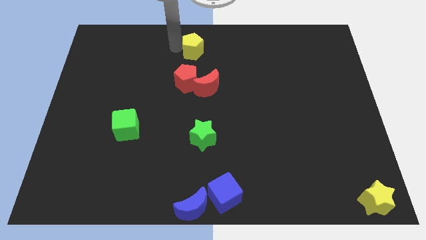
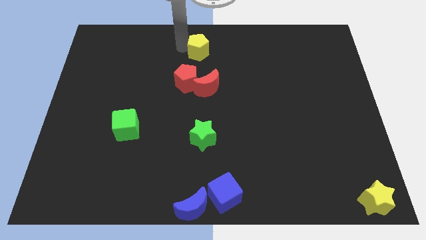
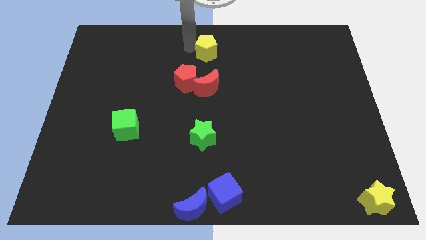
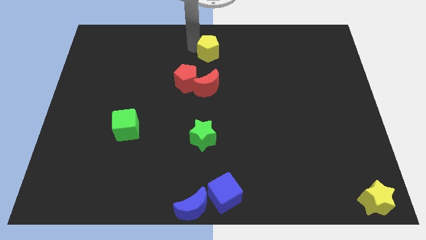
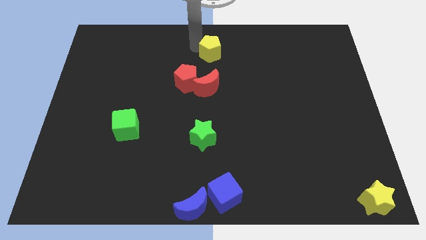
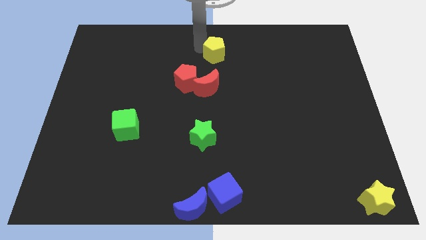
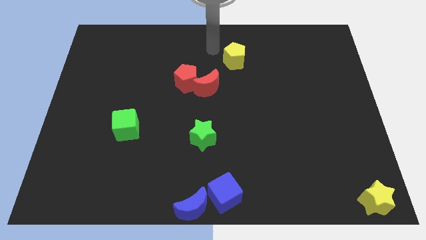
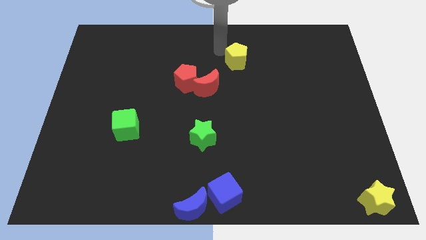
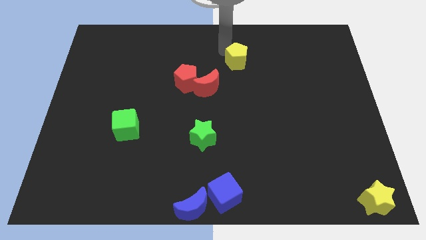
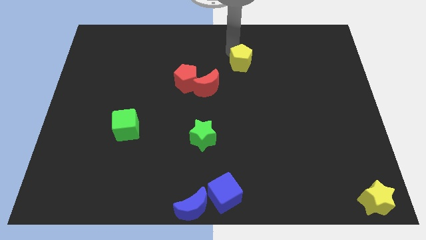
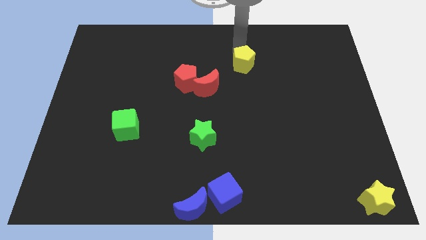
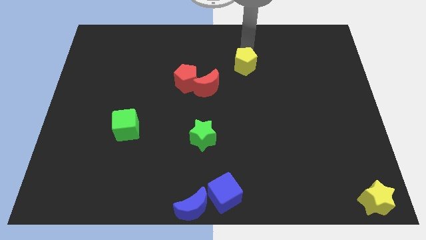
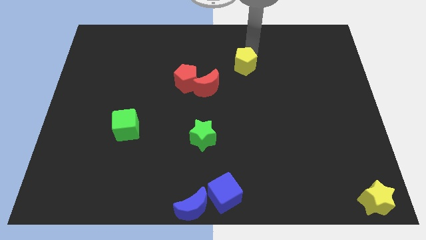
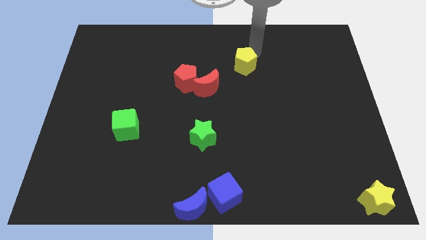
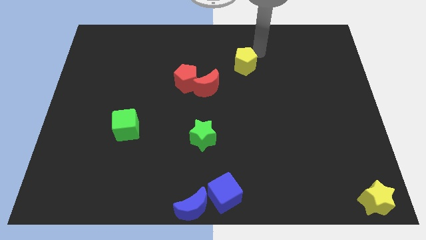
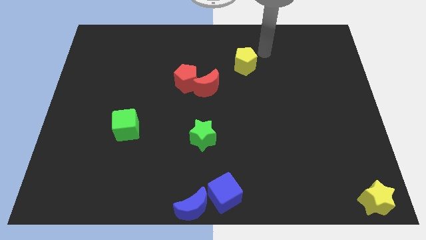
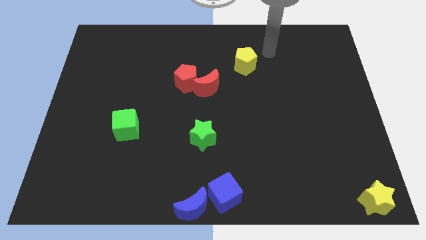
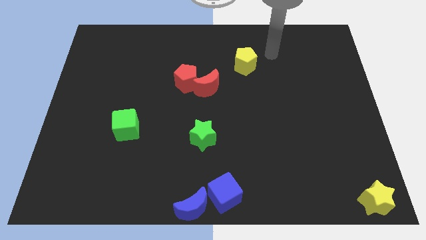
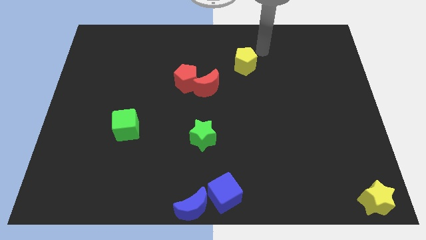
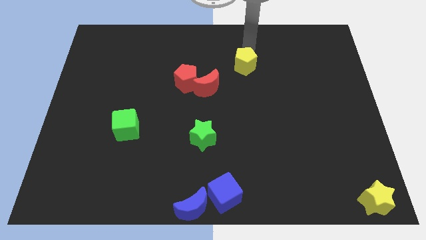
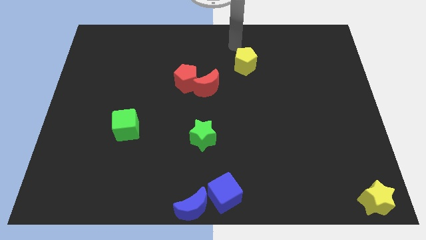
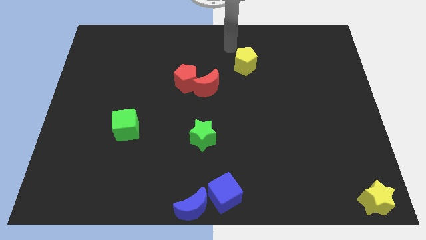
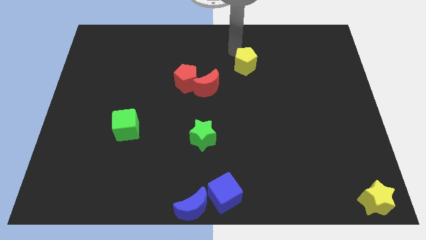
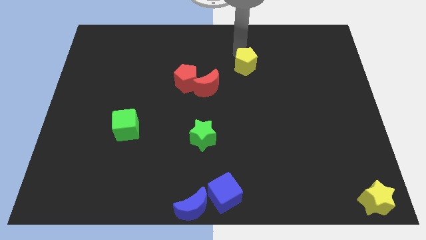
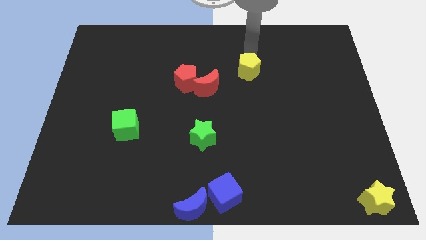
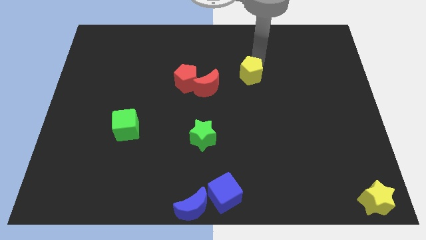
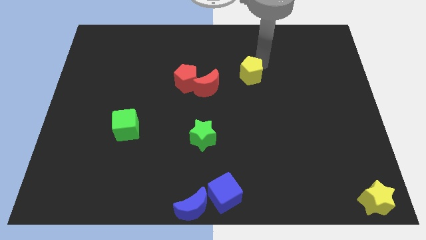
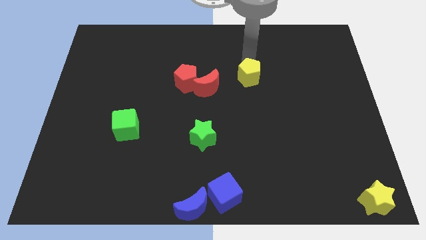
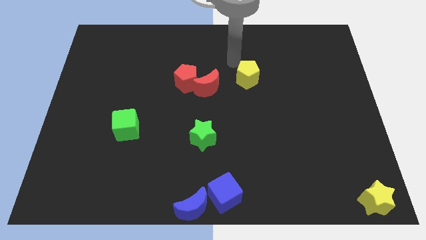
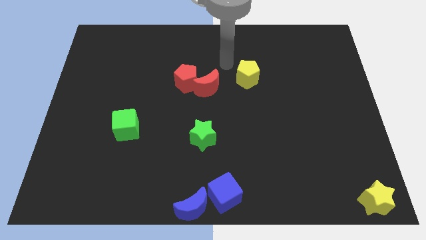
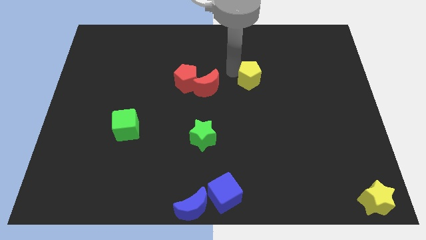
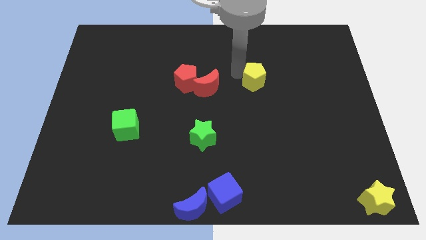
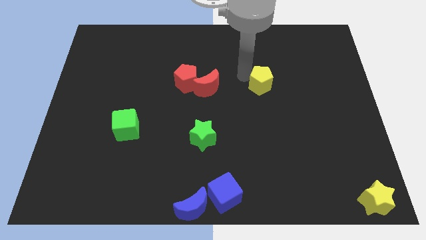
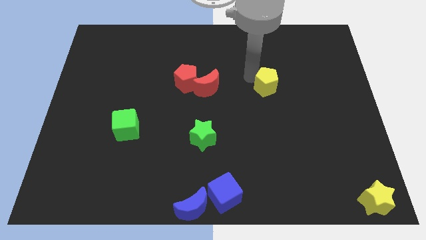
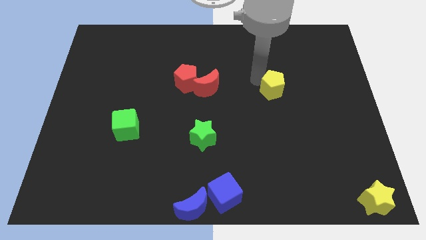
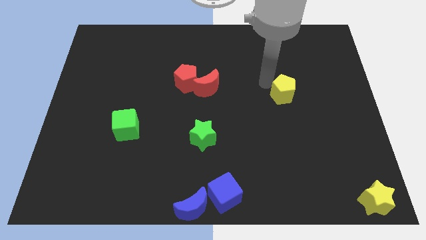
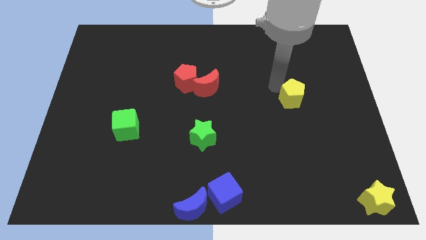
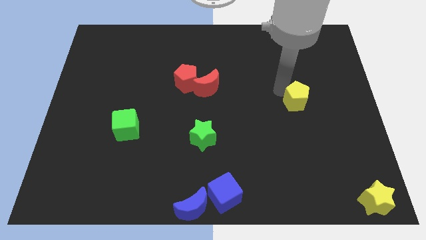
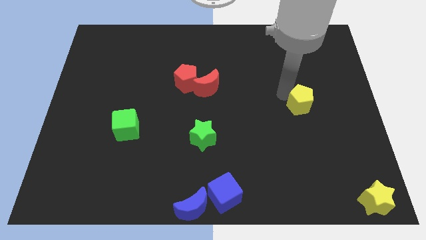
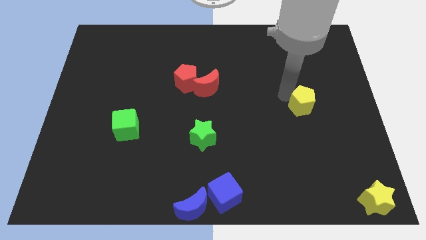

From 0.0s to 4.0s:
move yellow pentagon towards yellow star

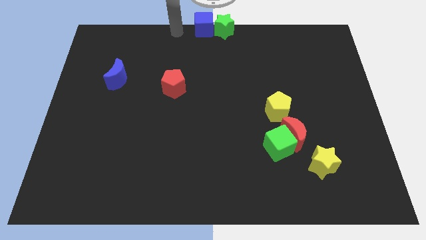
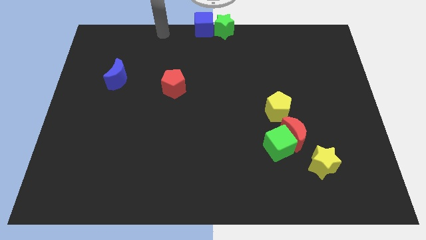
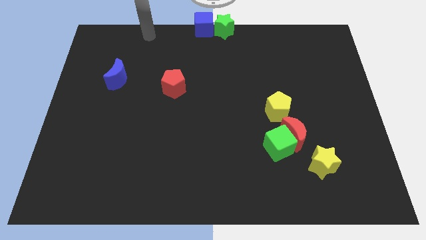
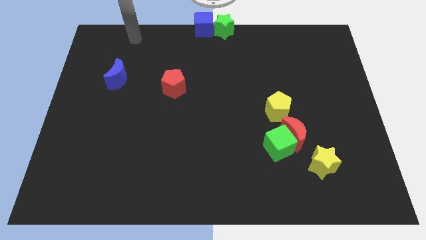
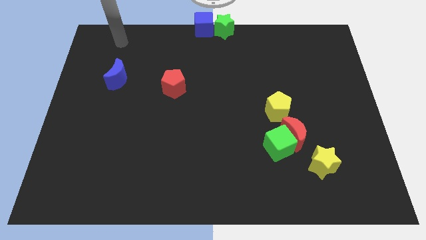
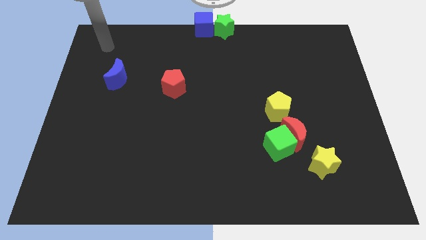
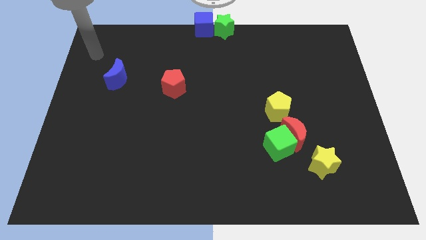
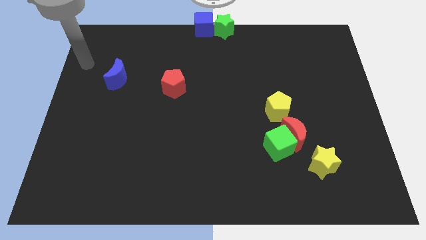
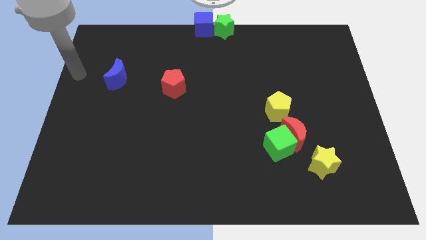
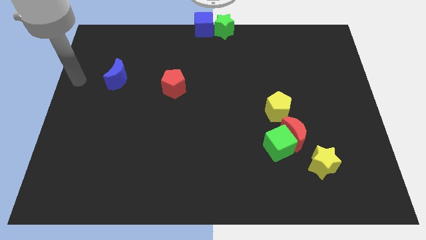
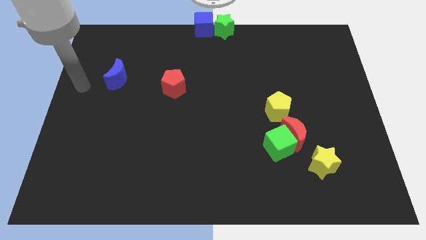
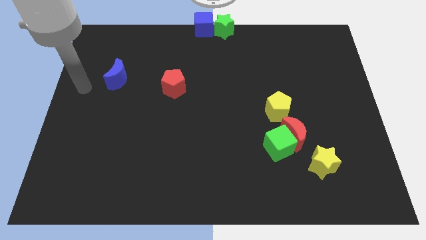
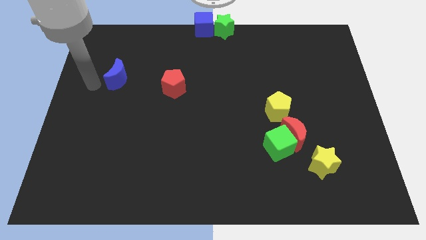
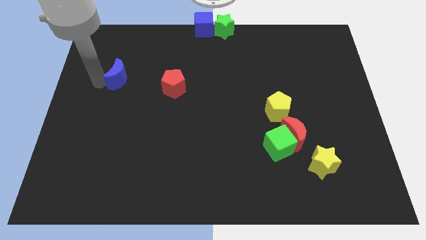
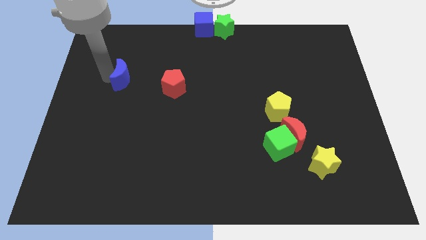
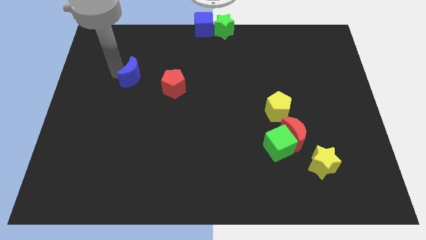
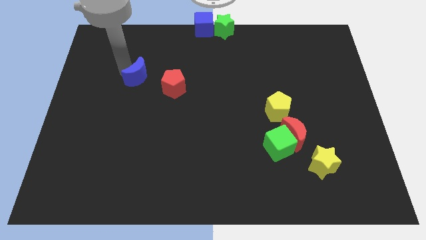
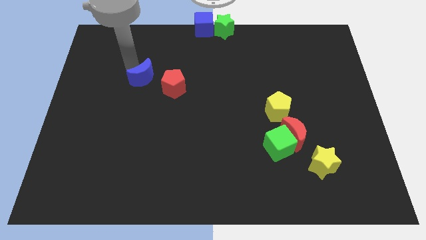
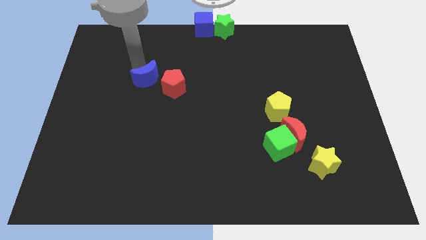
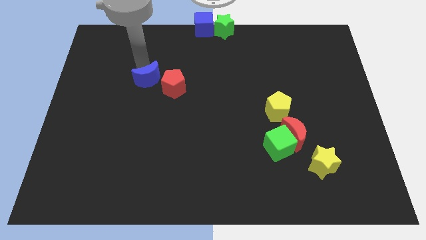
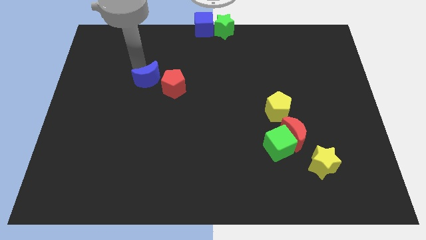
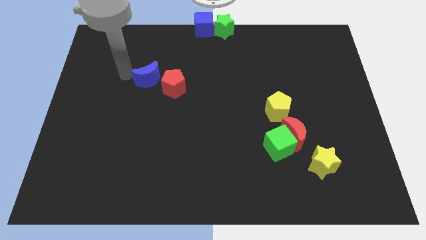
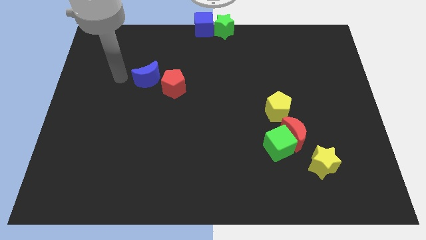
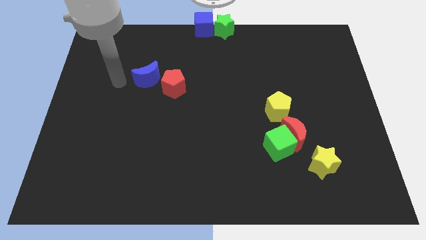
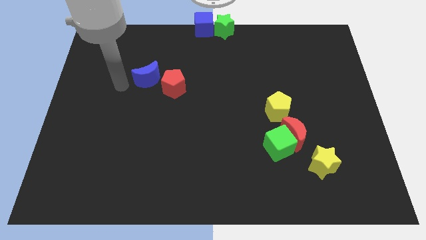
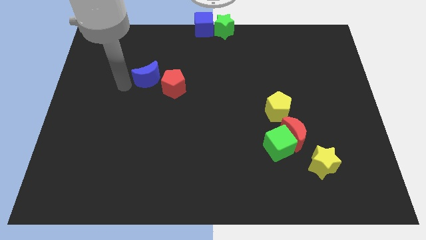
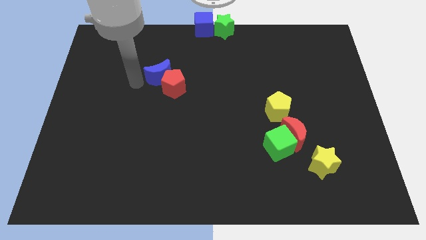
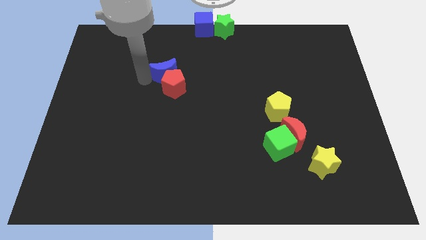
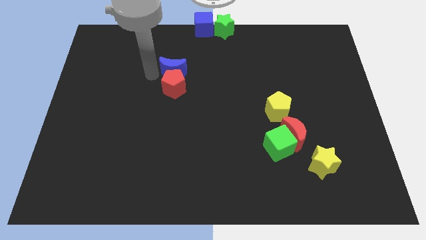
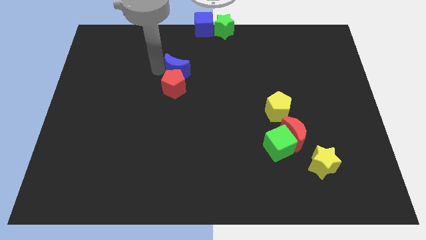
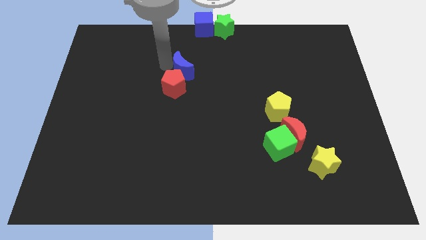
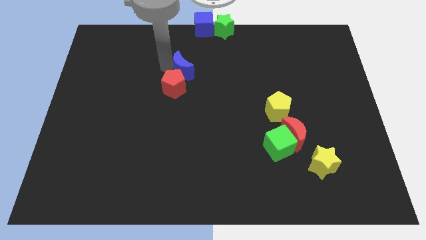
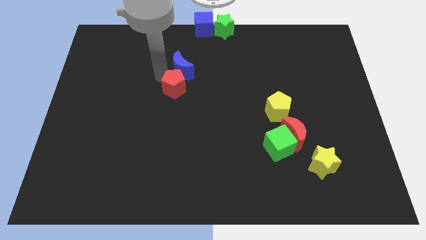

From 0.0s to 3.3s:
place the blue crescent above the red pentagon

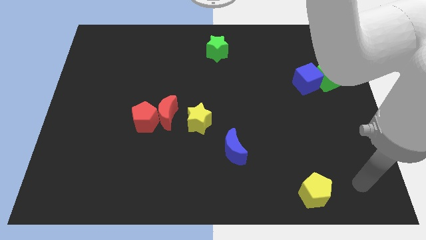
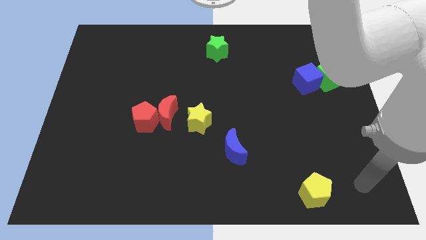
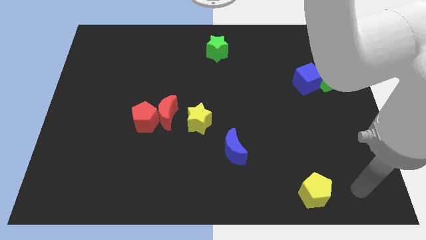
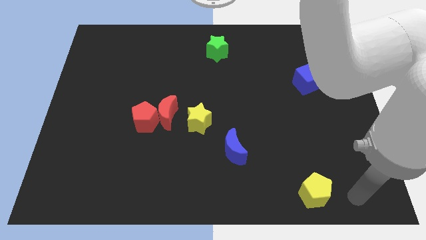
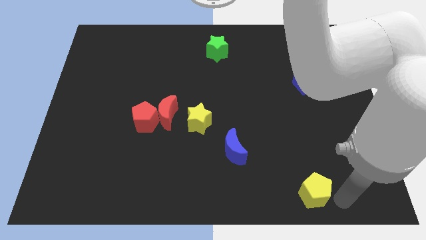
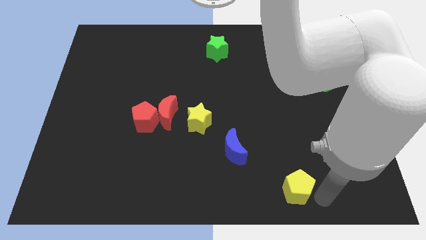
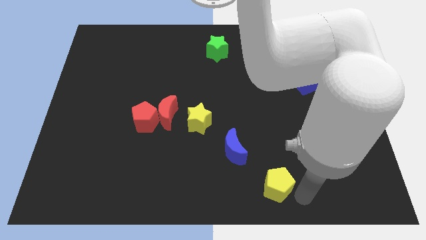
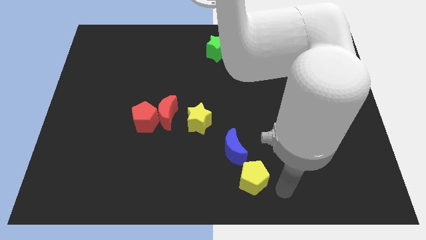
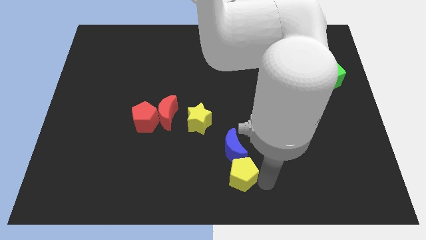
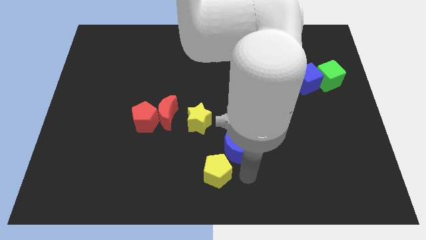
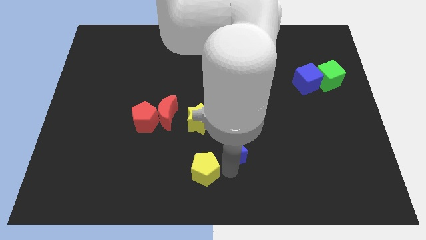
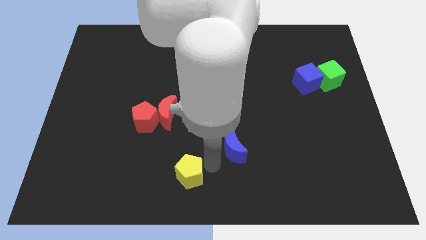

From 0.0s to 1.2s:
place the yellow pentagon below the yellow star

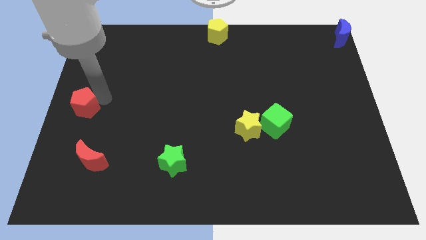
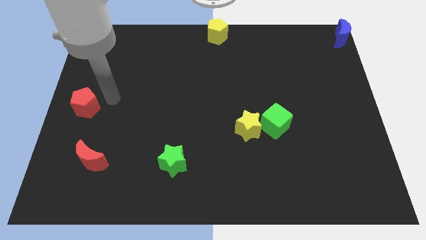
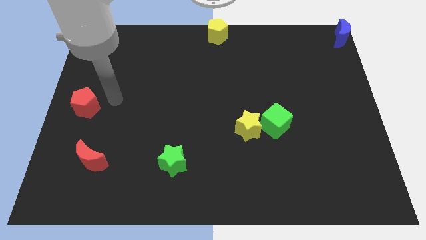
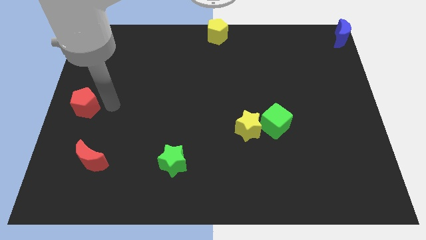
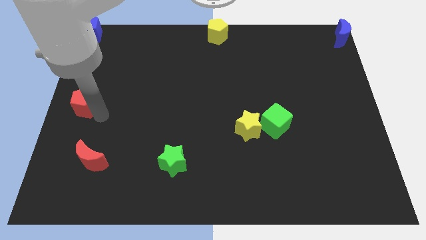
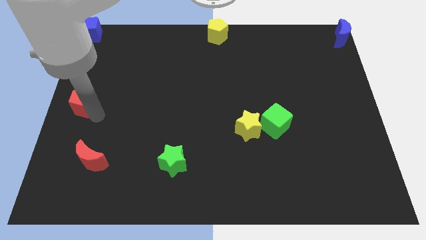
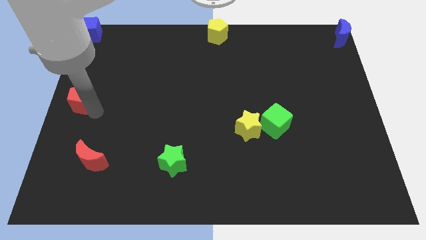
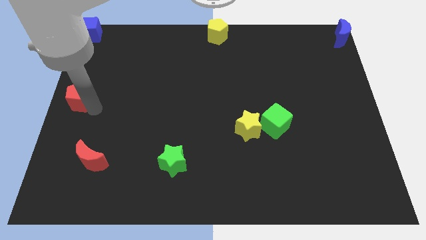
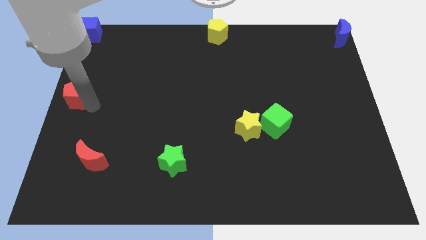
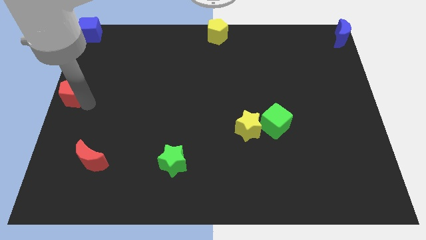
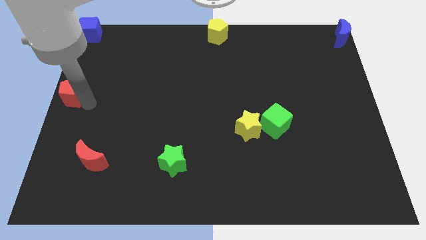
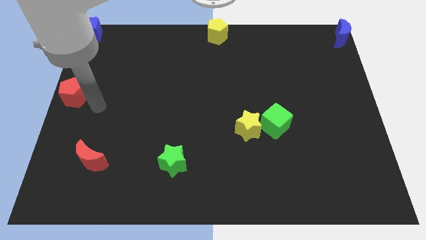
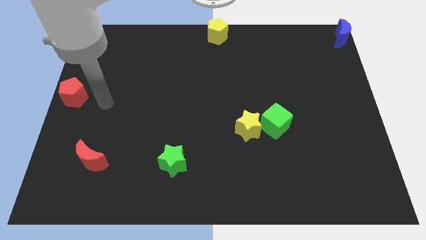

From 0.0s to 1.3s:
move the red pentagon to the left center of the board
